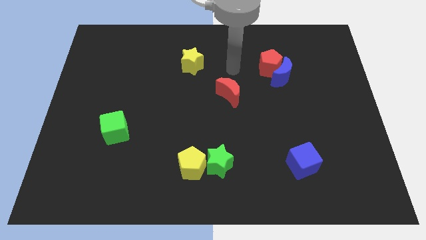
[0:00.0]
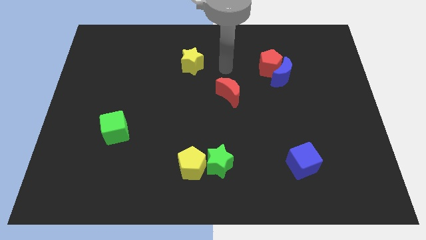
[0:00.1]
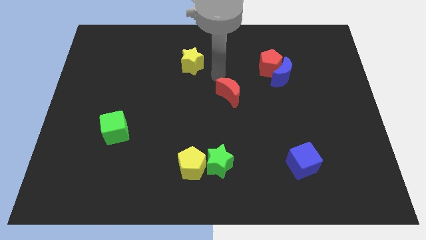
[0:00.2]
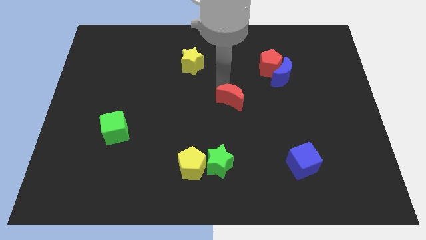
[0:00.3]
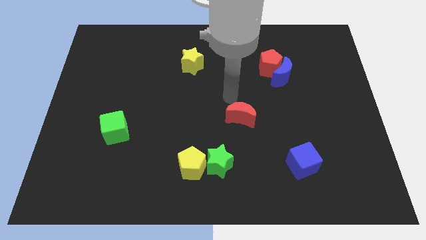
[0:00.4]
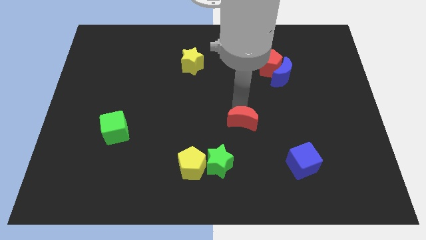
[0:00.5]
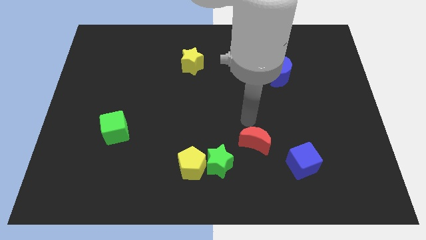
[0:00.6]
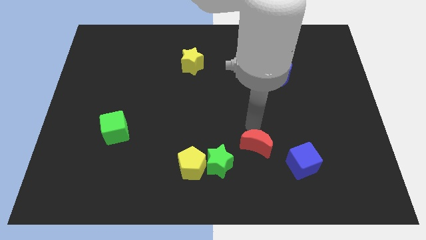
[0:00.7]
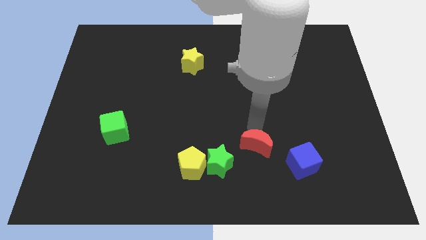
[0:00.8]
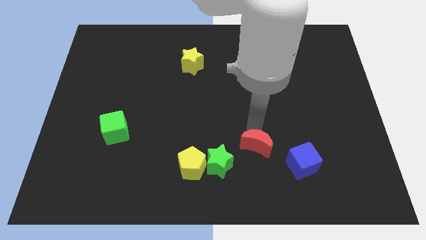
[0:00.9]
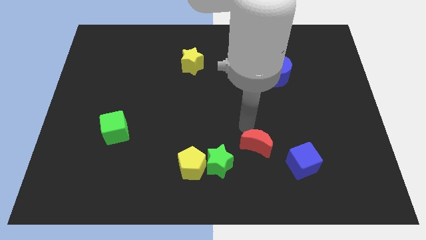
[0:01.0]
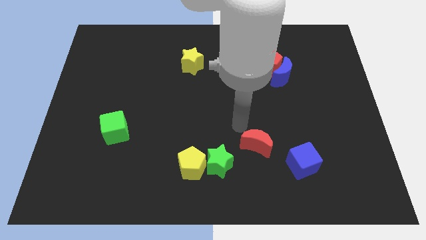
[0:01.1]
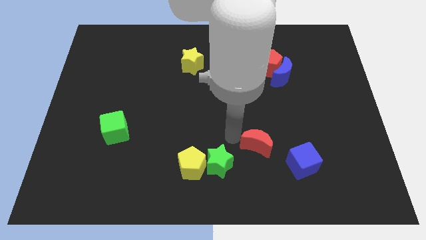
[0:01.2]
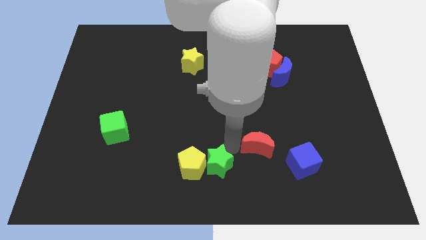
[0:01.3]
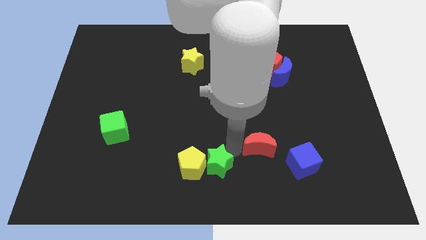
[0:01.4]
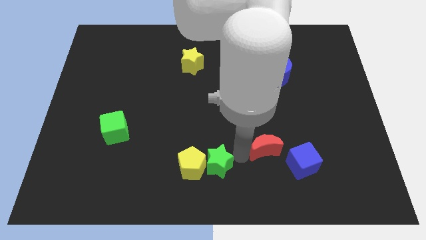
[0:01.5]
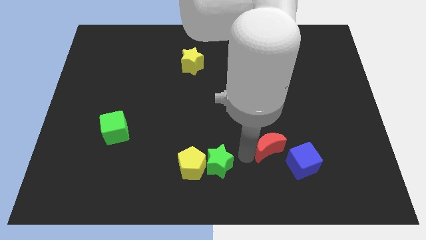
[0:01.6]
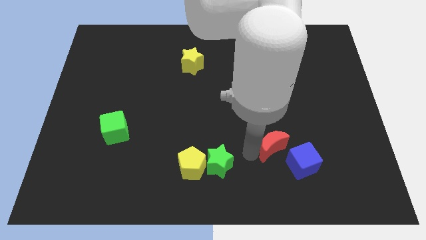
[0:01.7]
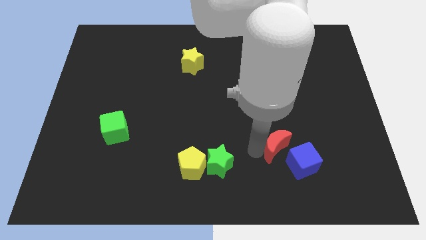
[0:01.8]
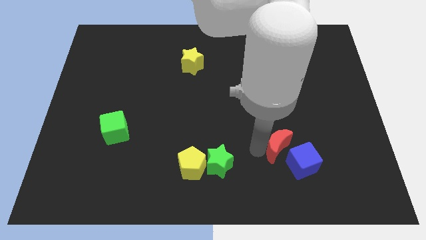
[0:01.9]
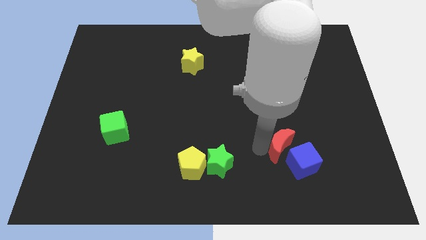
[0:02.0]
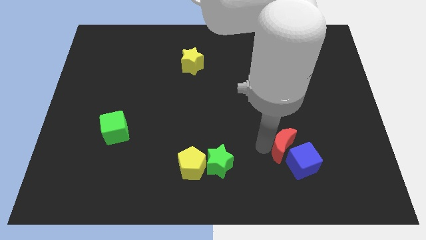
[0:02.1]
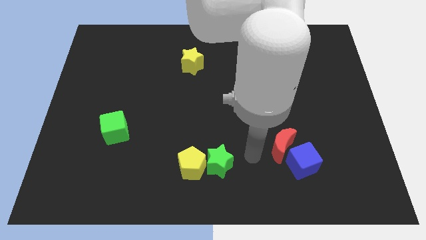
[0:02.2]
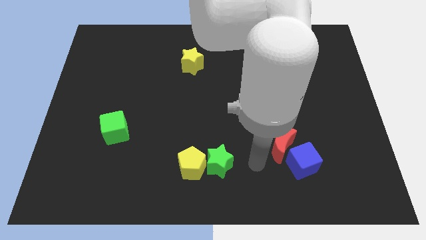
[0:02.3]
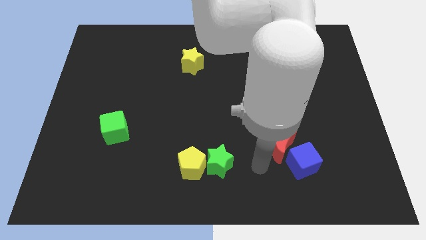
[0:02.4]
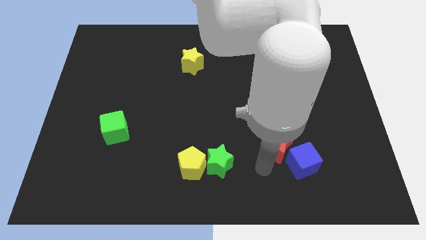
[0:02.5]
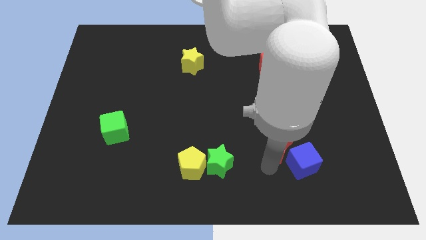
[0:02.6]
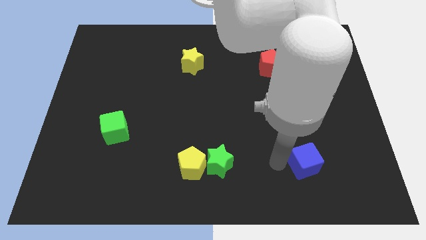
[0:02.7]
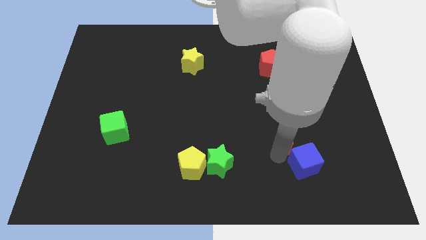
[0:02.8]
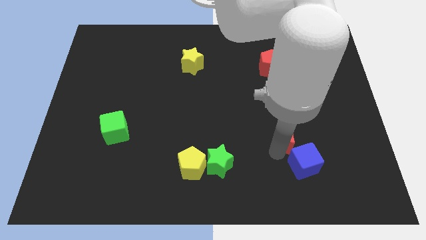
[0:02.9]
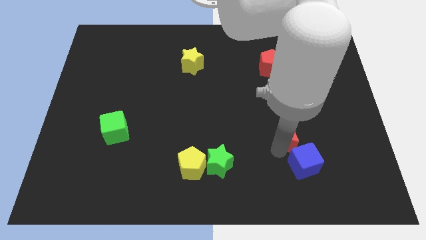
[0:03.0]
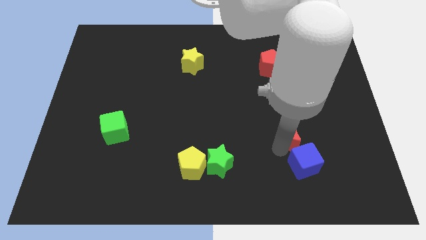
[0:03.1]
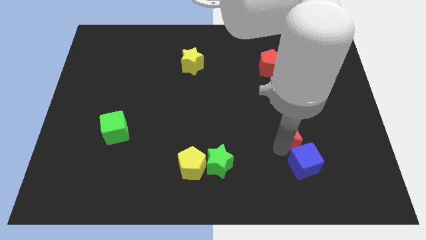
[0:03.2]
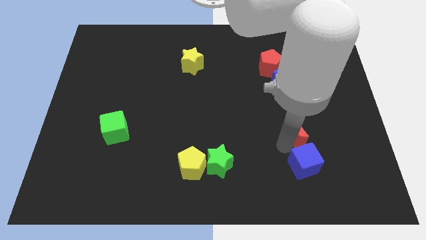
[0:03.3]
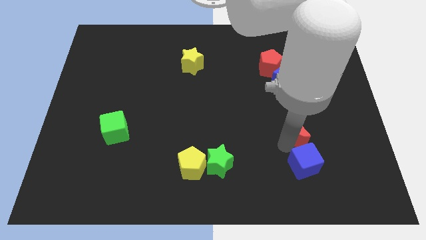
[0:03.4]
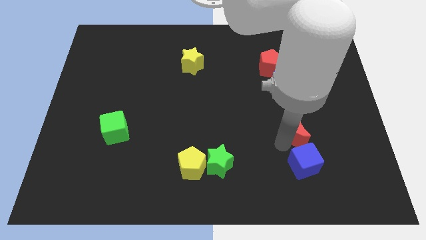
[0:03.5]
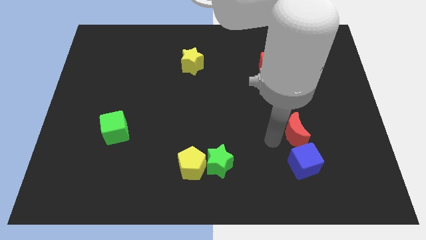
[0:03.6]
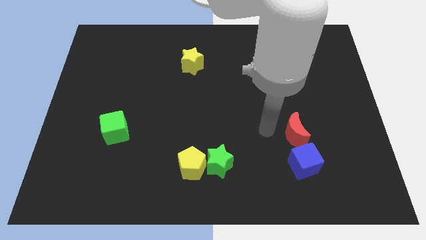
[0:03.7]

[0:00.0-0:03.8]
push the red crescent above the blue cube

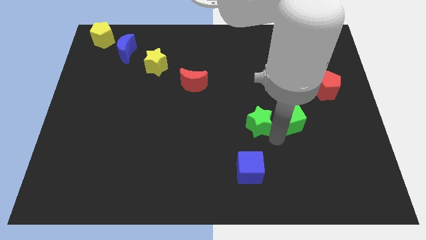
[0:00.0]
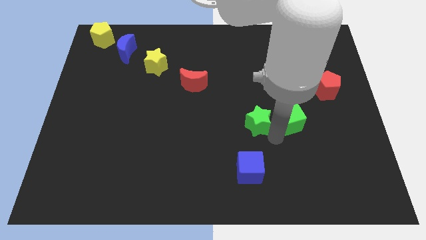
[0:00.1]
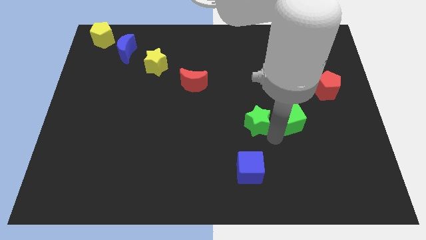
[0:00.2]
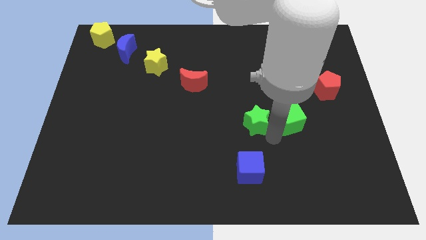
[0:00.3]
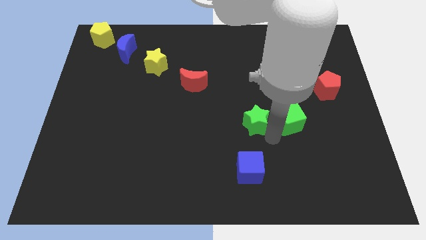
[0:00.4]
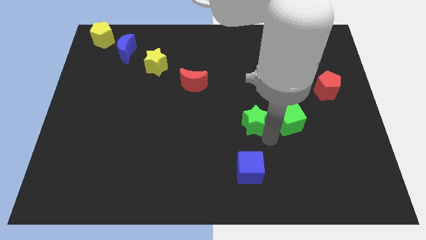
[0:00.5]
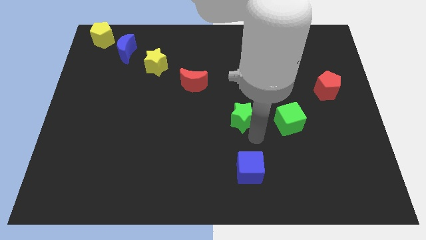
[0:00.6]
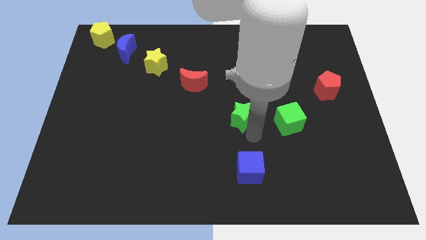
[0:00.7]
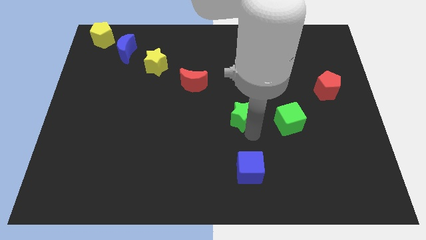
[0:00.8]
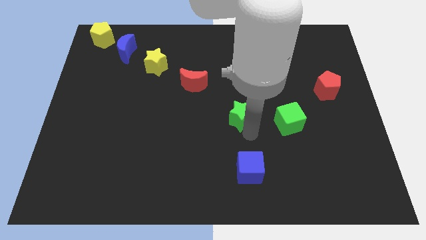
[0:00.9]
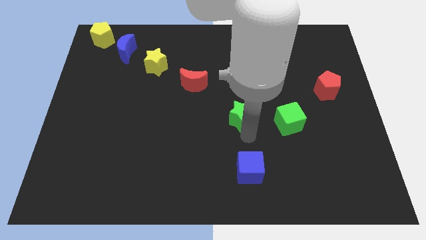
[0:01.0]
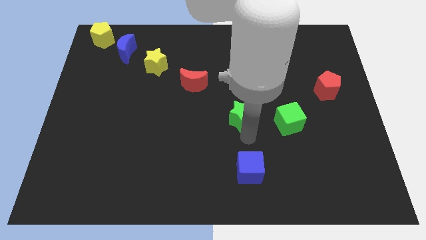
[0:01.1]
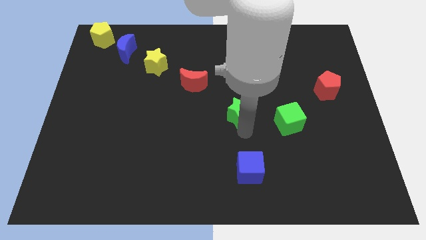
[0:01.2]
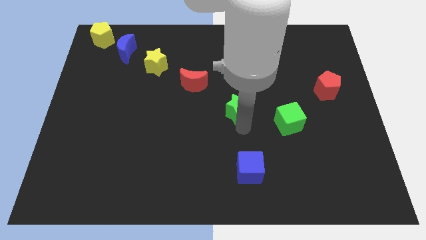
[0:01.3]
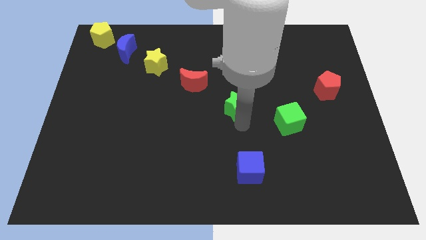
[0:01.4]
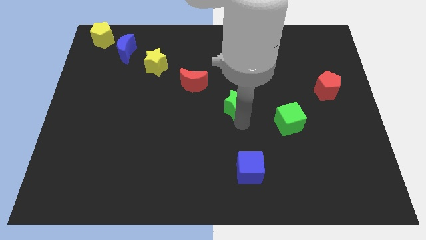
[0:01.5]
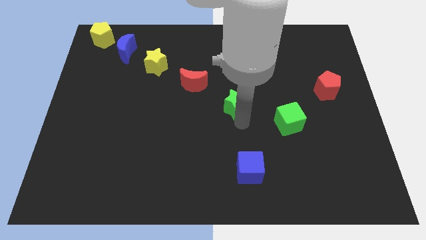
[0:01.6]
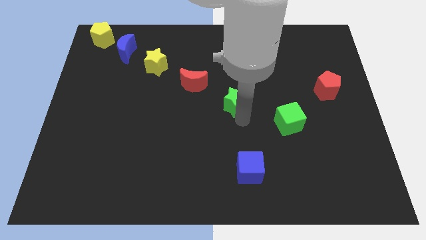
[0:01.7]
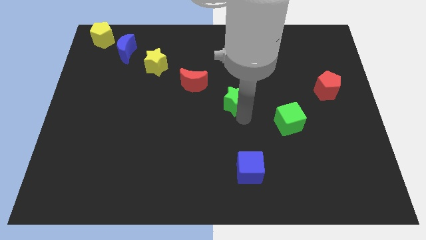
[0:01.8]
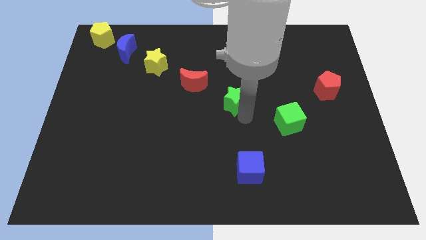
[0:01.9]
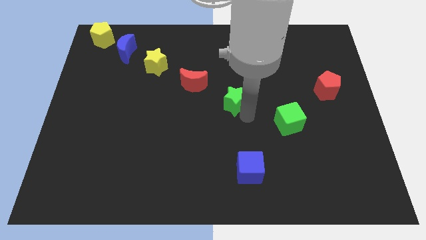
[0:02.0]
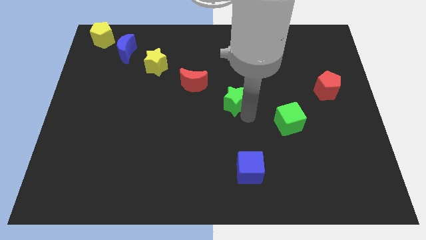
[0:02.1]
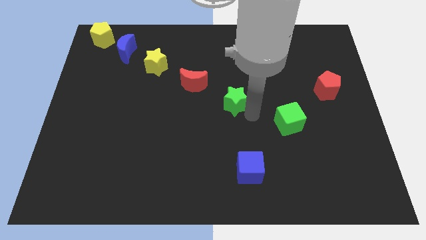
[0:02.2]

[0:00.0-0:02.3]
separate the green star from the green cube

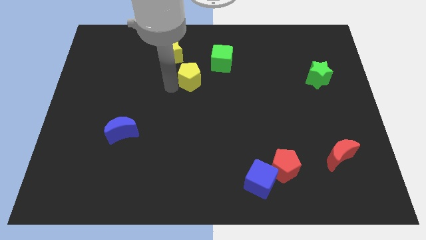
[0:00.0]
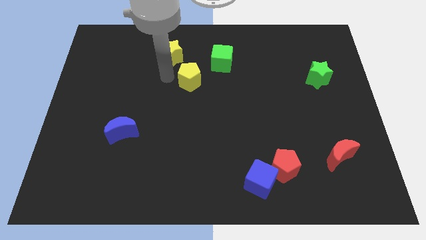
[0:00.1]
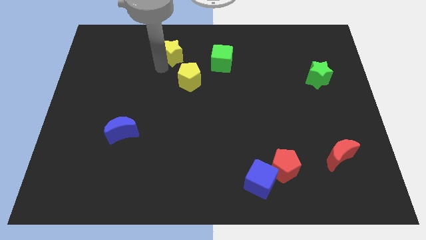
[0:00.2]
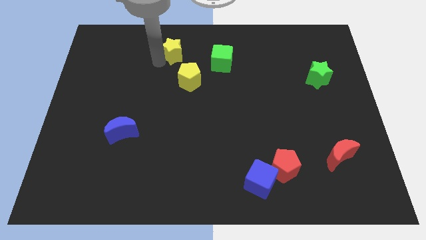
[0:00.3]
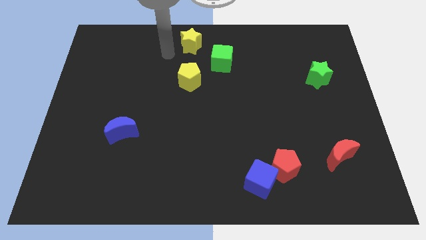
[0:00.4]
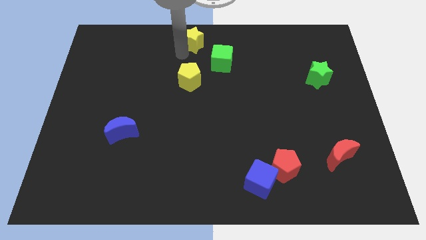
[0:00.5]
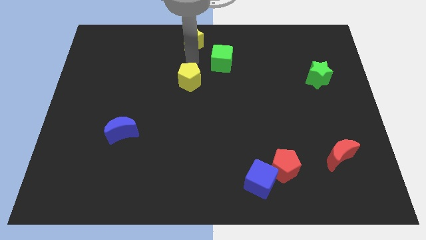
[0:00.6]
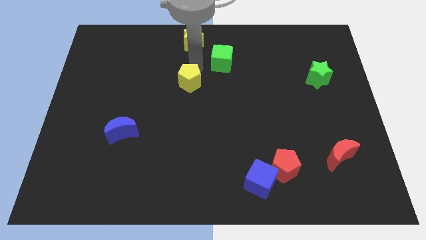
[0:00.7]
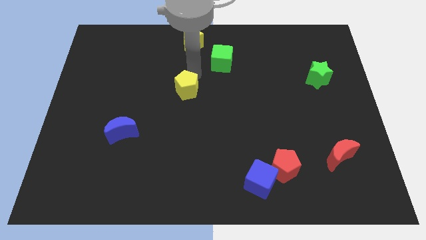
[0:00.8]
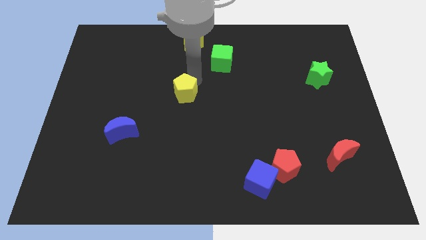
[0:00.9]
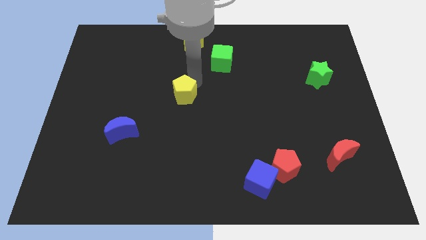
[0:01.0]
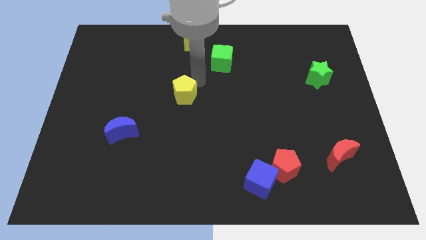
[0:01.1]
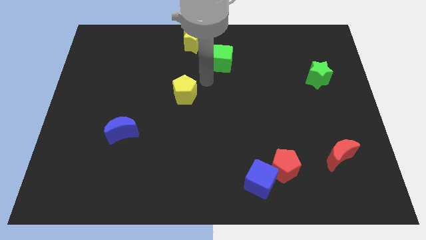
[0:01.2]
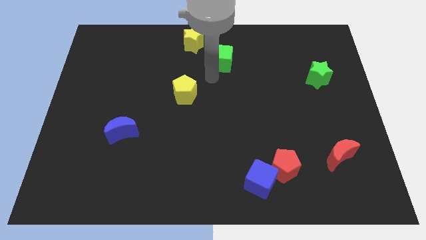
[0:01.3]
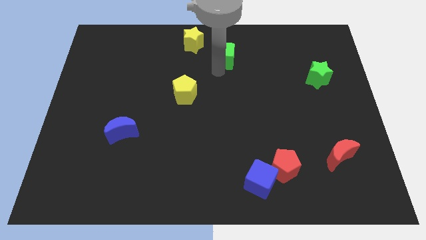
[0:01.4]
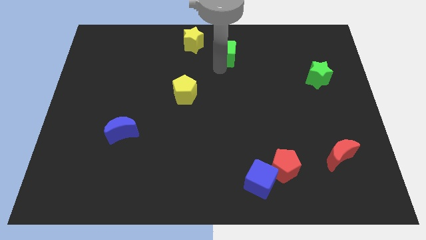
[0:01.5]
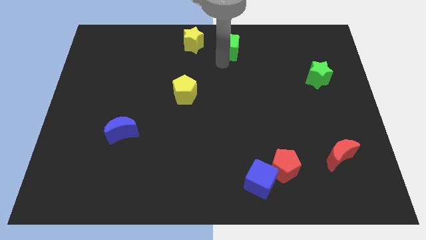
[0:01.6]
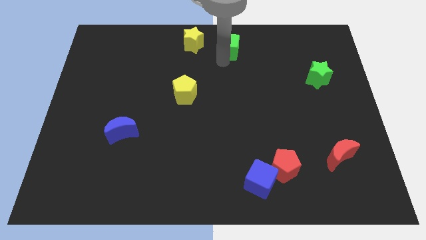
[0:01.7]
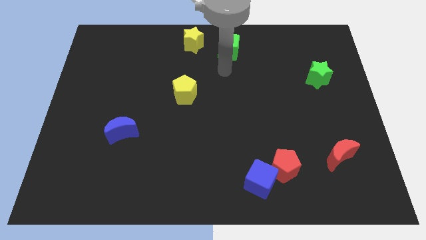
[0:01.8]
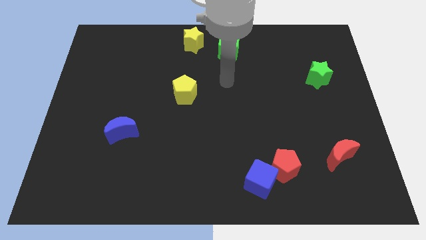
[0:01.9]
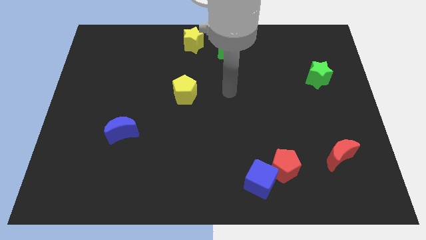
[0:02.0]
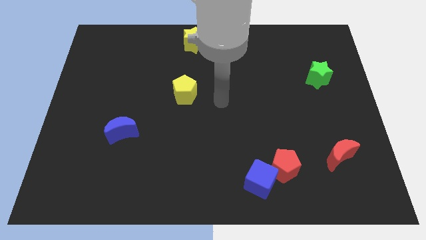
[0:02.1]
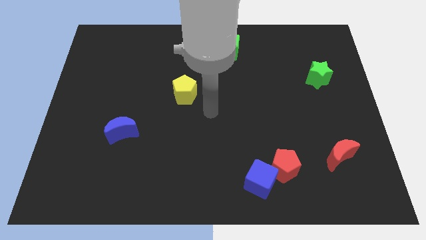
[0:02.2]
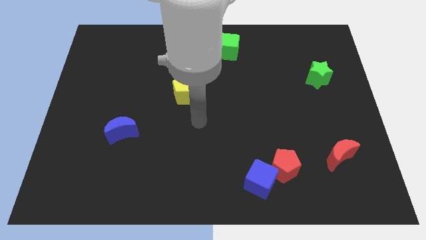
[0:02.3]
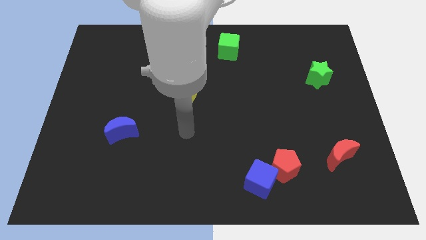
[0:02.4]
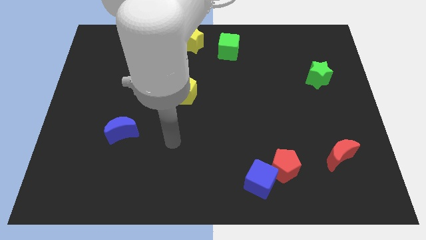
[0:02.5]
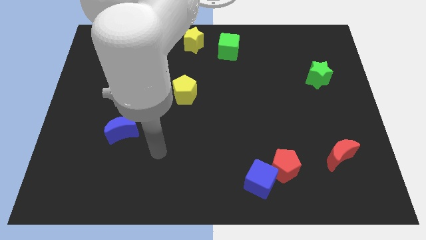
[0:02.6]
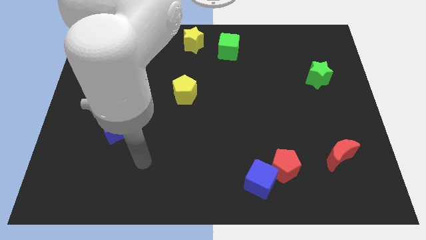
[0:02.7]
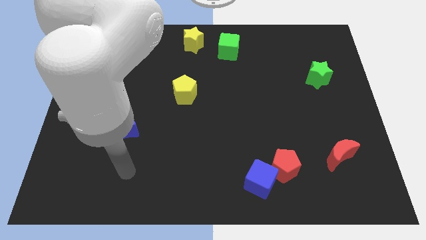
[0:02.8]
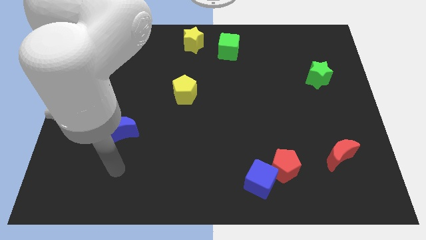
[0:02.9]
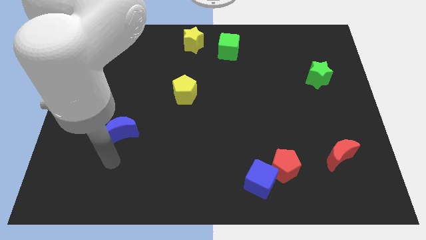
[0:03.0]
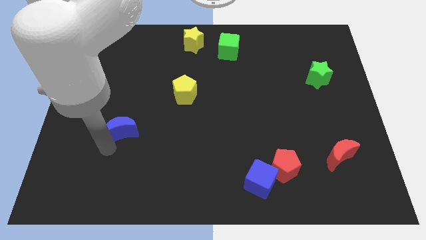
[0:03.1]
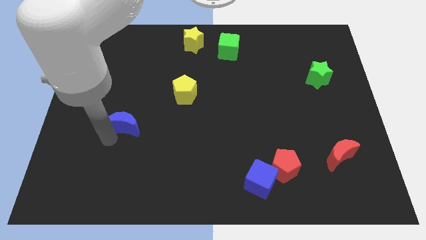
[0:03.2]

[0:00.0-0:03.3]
place the arm below the blue moon
